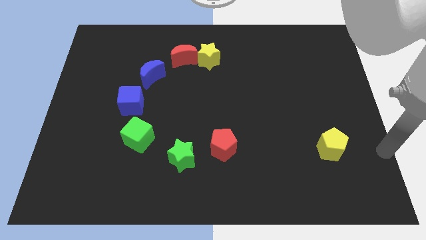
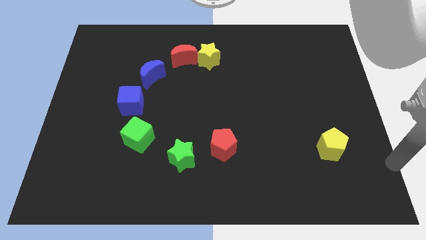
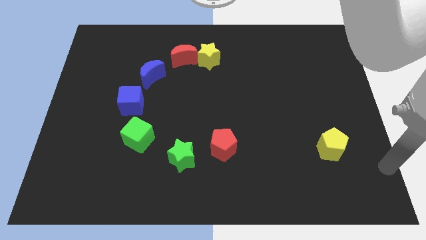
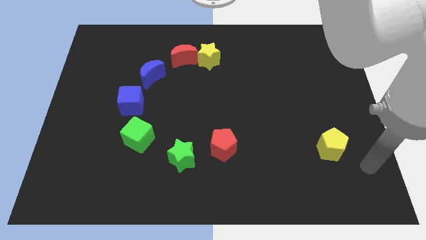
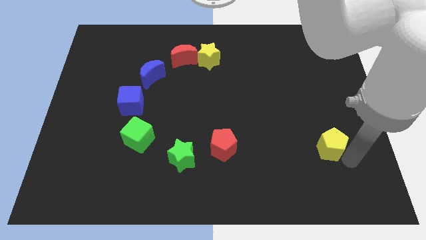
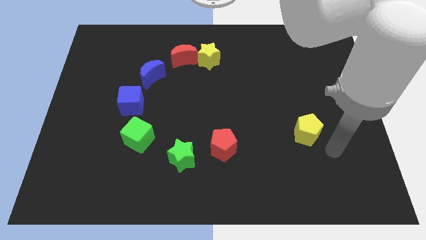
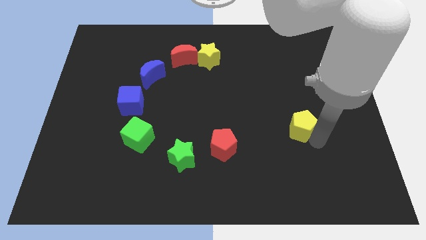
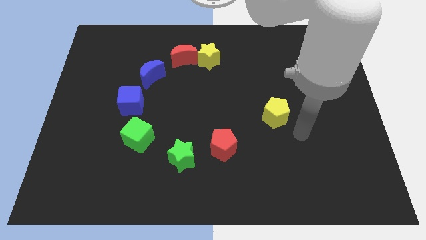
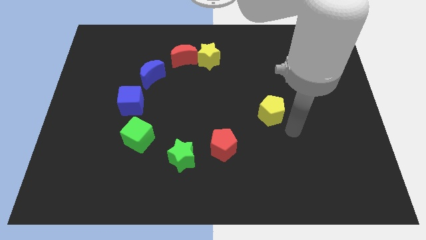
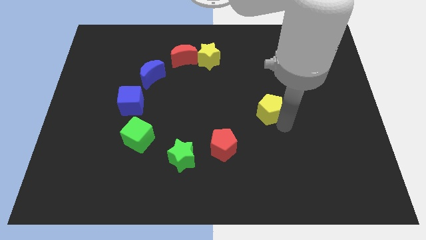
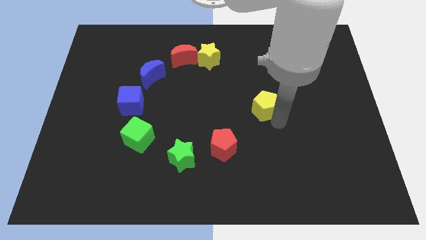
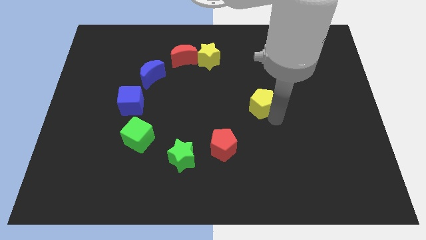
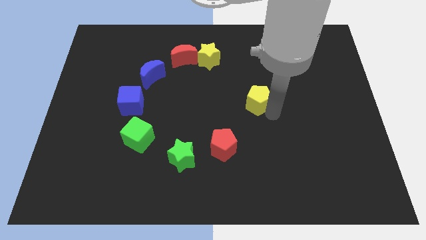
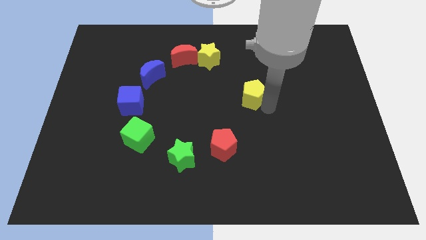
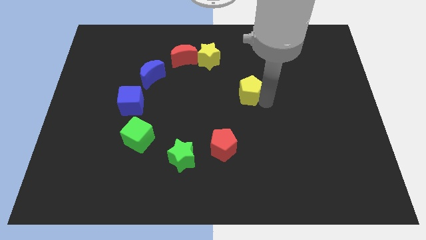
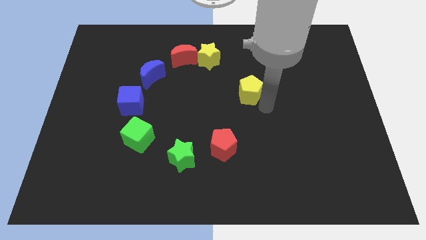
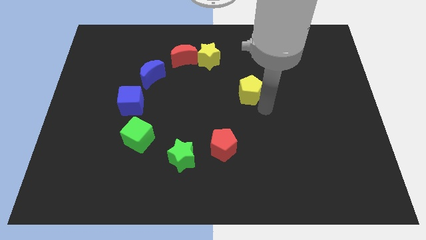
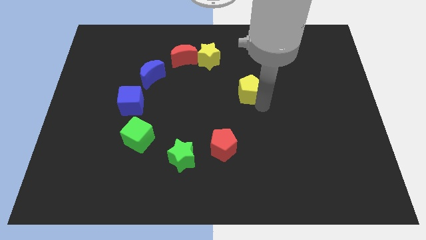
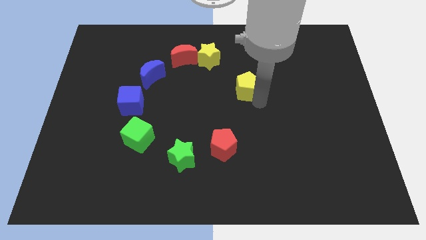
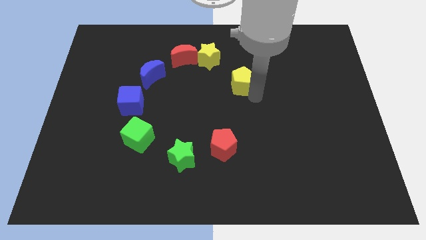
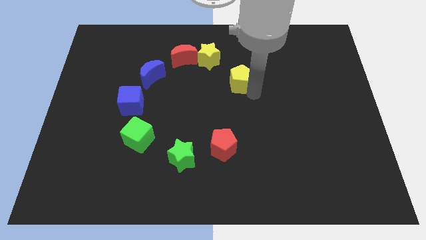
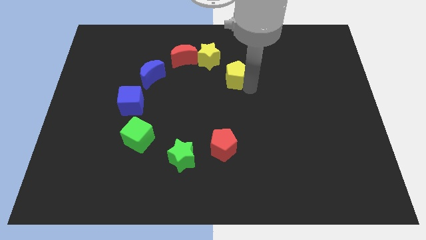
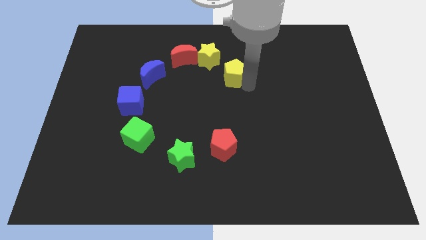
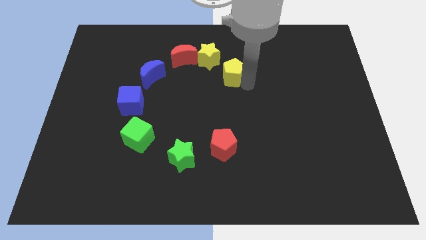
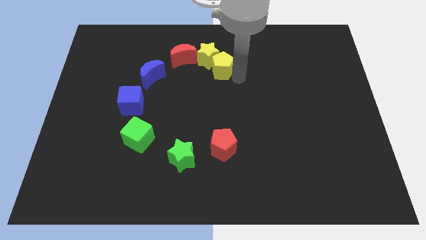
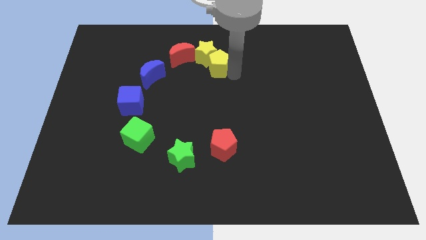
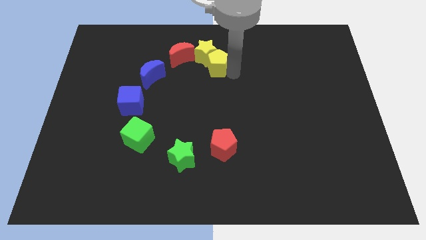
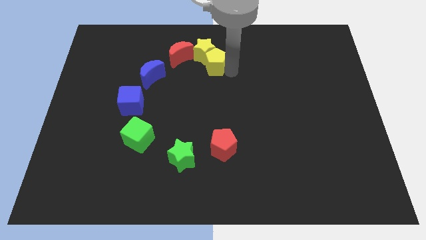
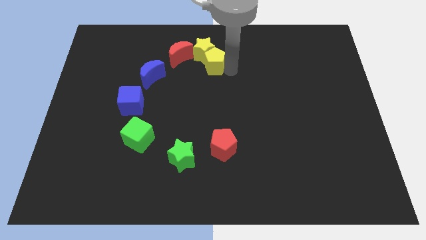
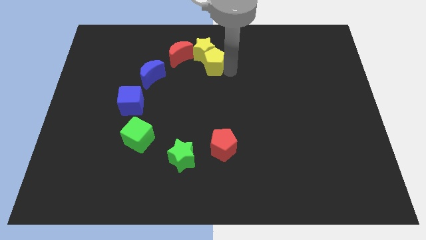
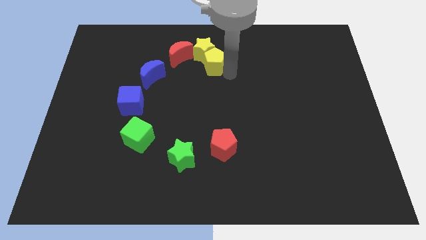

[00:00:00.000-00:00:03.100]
slide yellow pentagon into yellow star

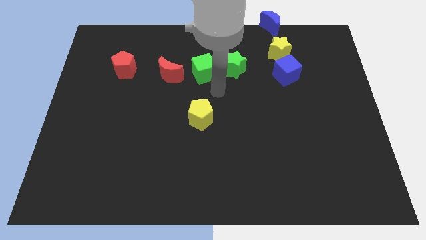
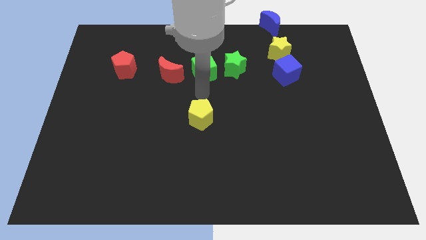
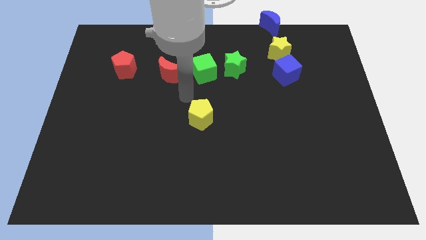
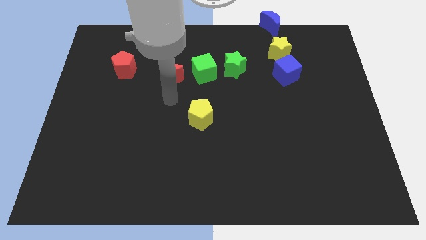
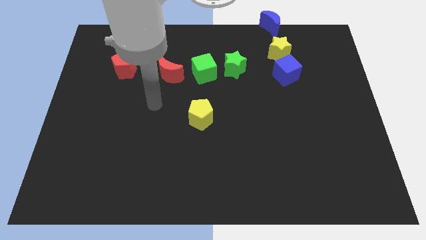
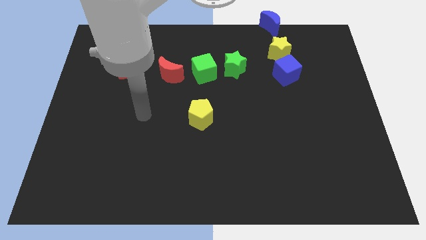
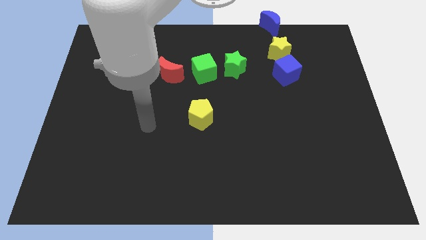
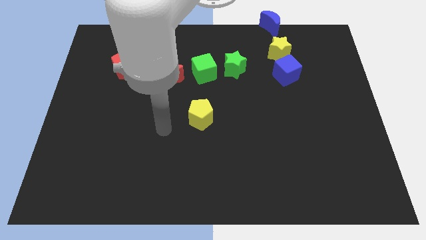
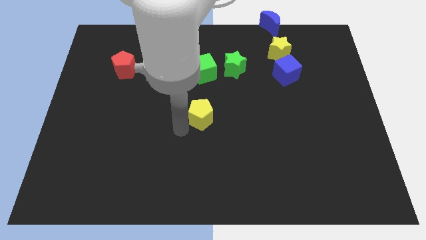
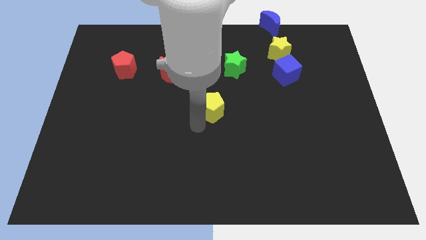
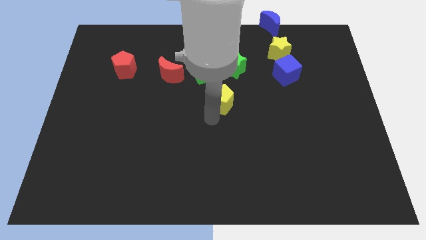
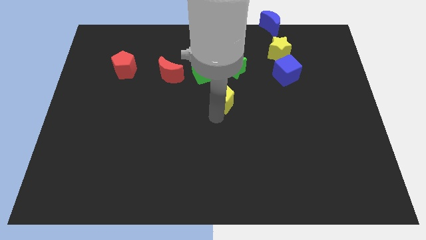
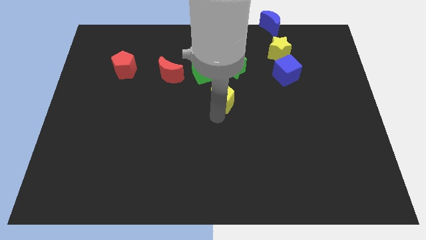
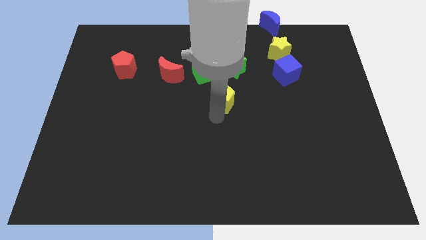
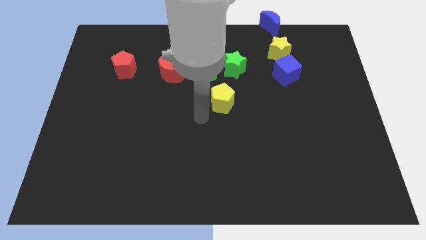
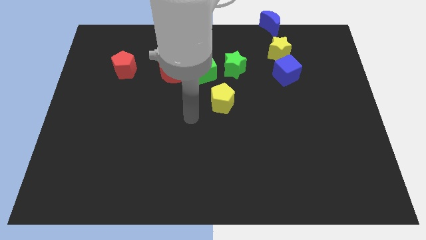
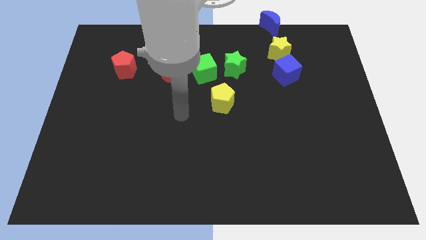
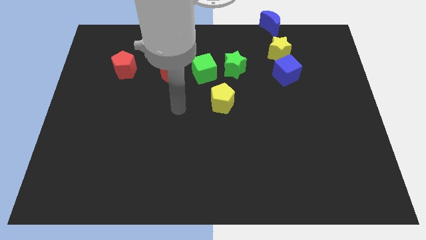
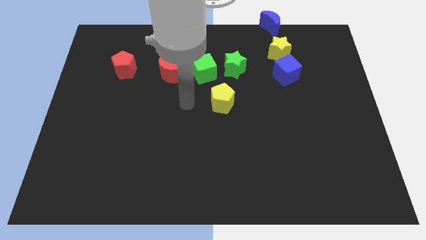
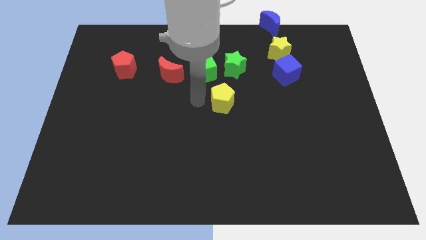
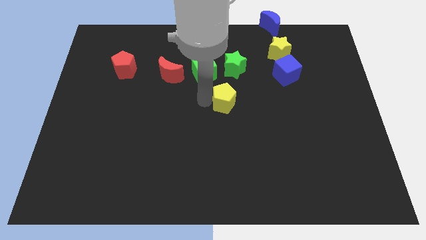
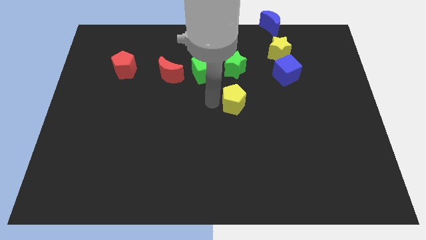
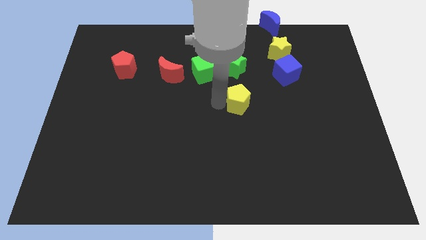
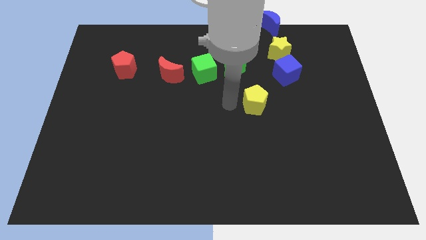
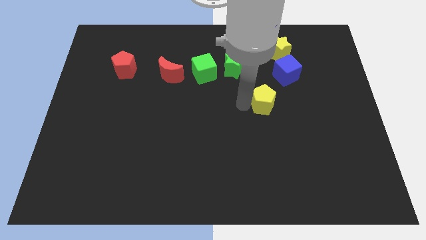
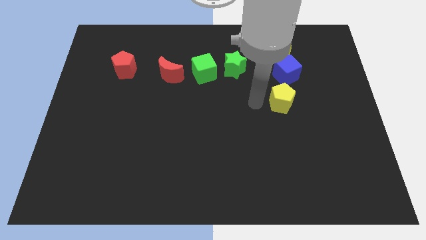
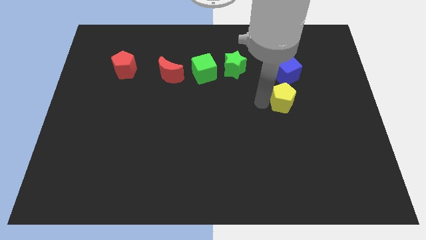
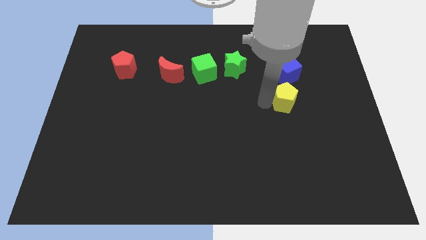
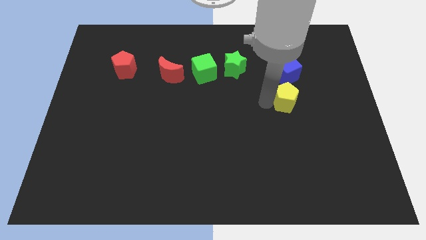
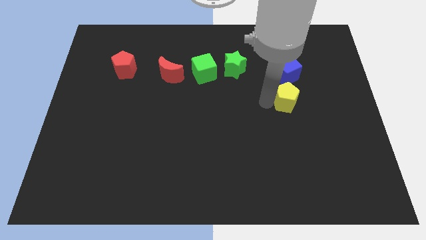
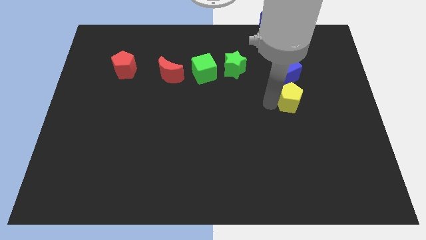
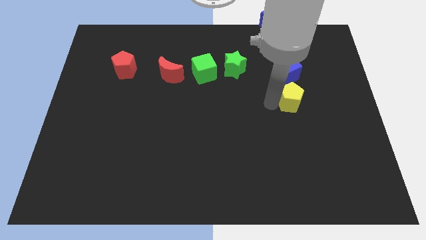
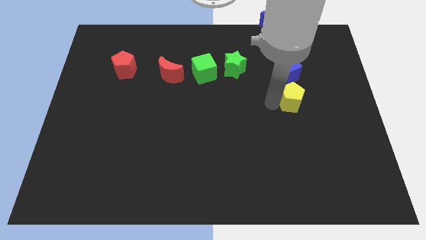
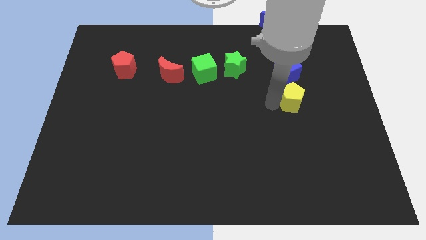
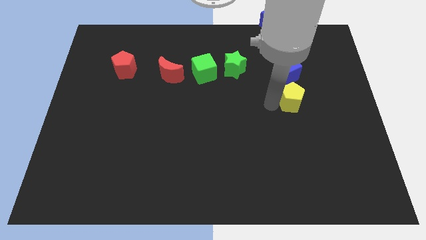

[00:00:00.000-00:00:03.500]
move the yellow pentagon vertically below the blue cube

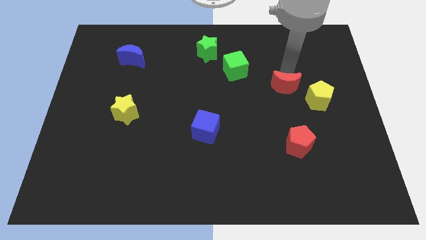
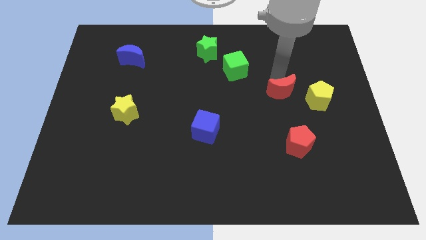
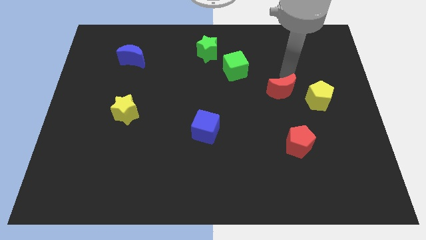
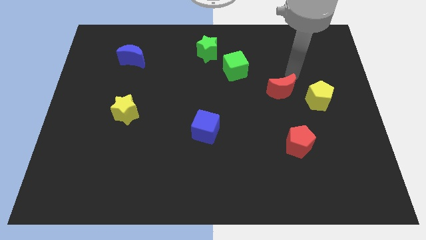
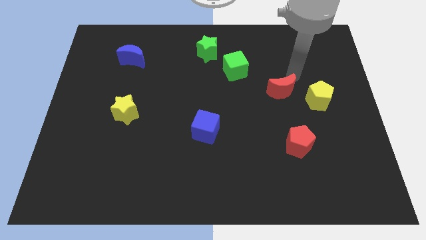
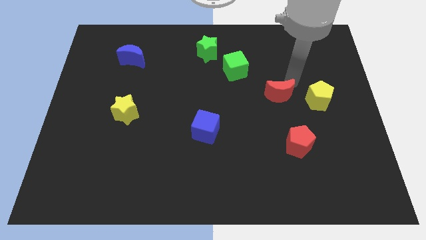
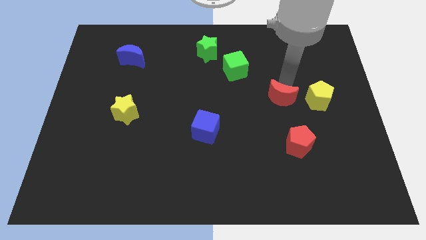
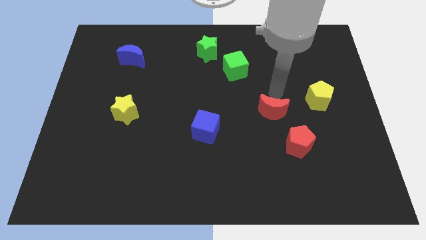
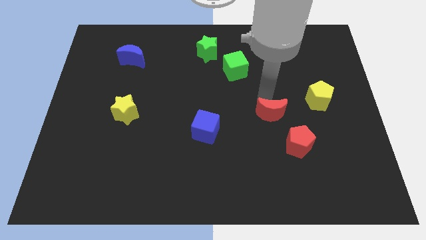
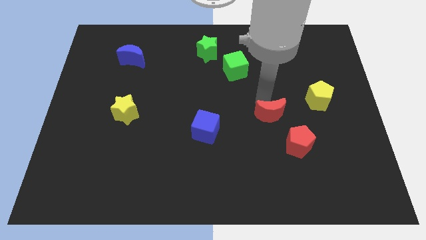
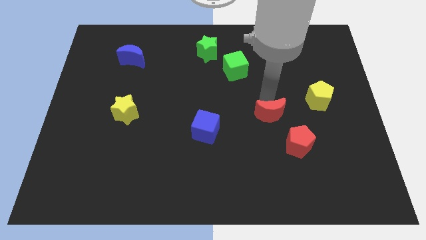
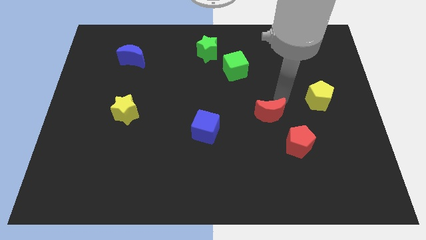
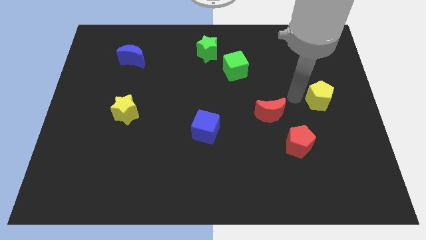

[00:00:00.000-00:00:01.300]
adjust the red moon diagonally top left of the red pentagon

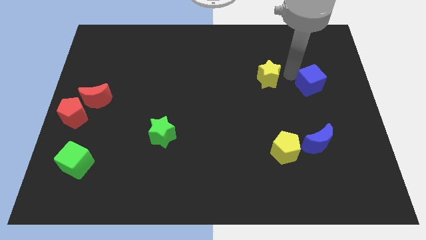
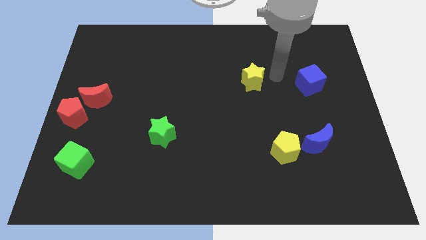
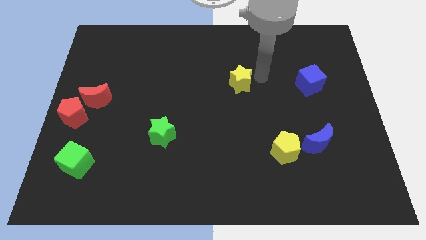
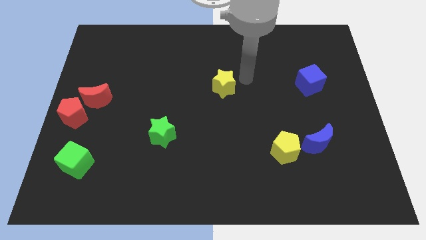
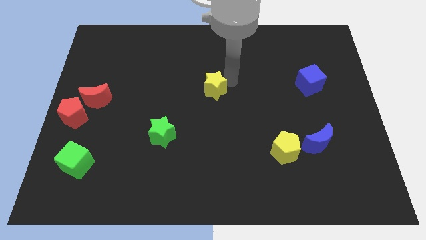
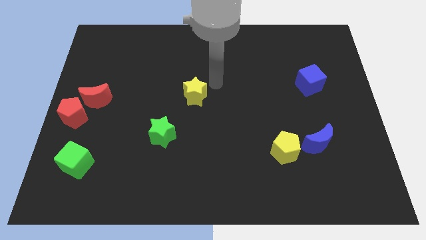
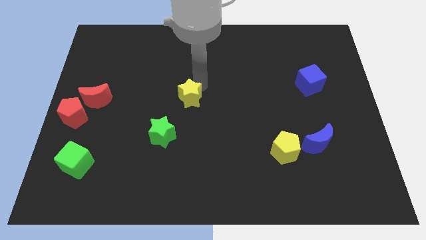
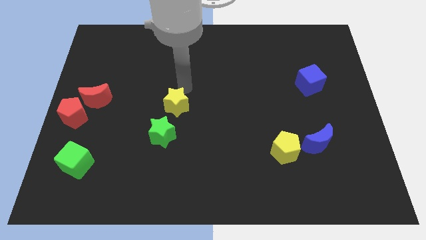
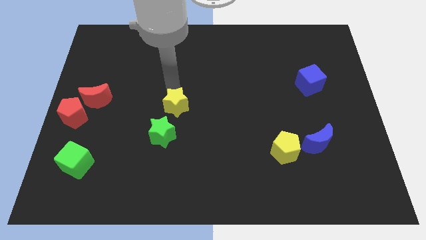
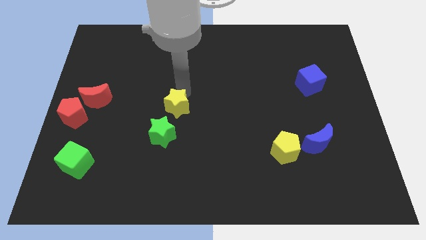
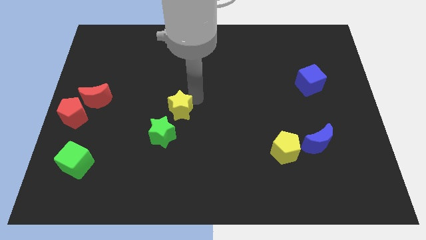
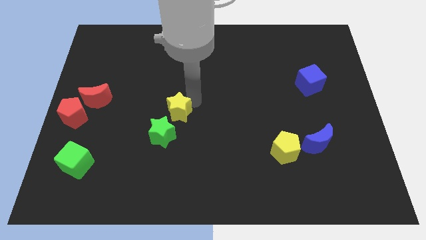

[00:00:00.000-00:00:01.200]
push the yellow star close to the green star
